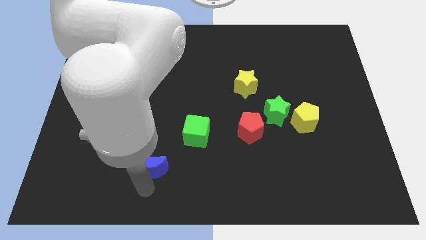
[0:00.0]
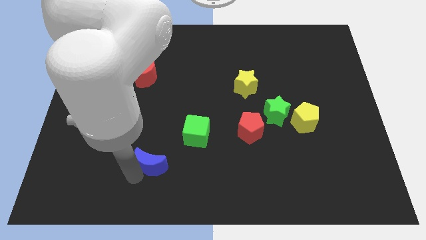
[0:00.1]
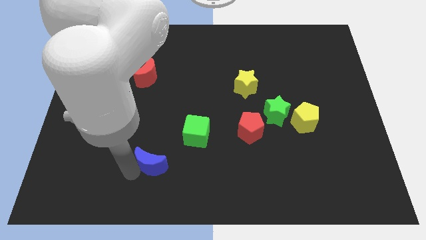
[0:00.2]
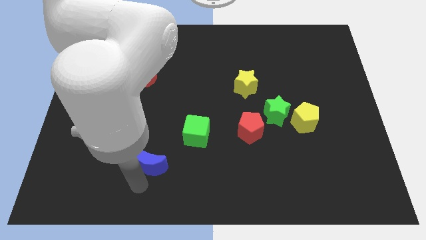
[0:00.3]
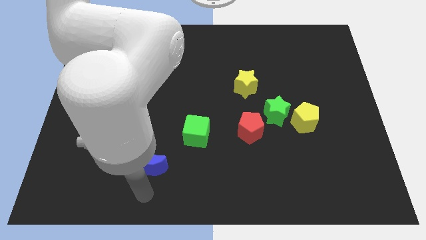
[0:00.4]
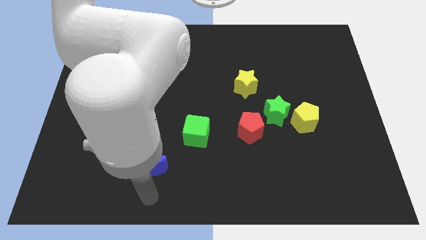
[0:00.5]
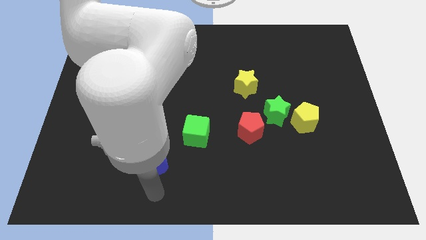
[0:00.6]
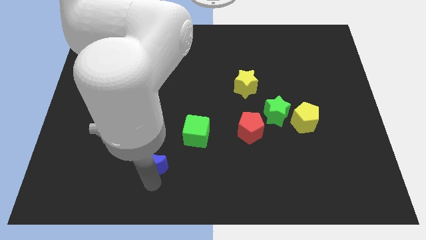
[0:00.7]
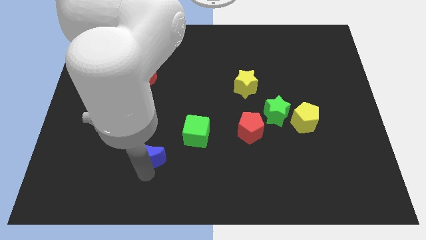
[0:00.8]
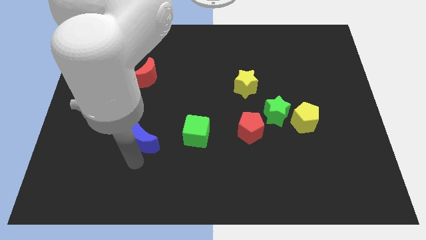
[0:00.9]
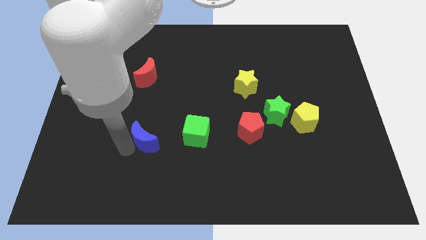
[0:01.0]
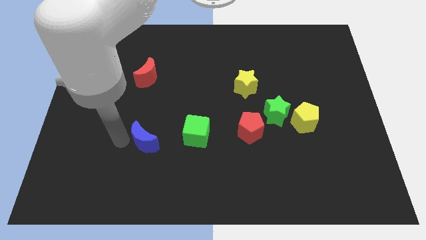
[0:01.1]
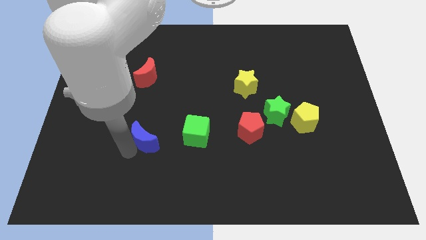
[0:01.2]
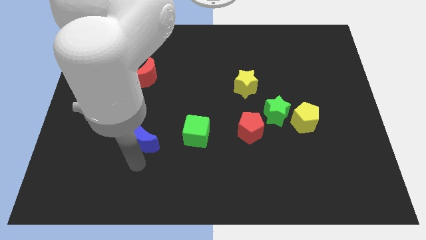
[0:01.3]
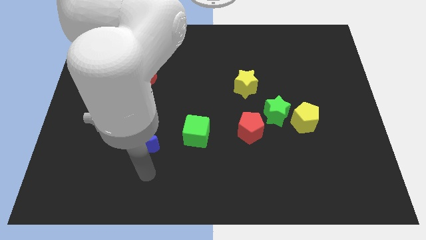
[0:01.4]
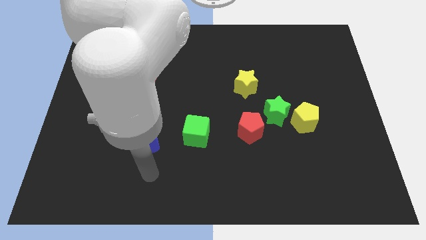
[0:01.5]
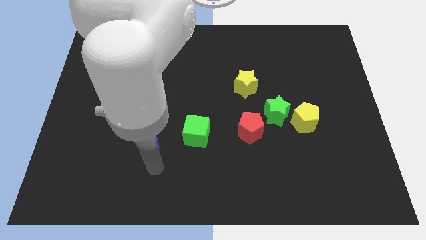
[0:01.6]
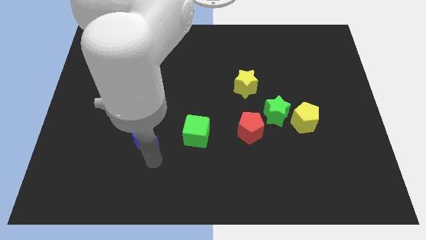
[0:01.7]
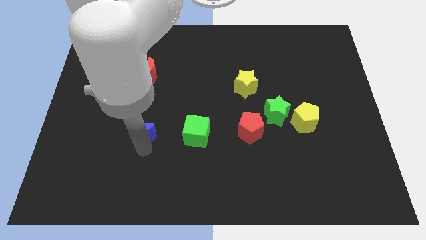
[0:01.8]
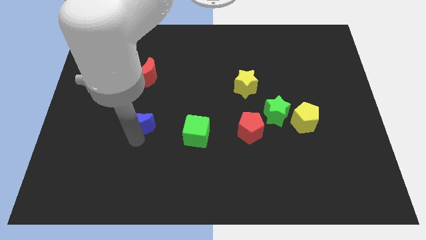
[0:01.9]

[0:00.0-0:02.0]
slide the blue moon to the left side of the green cube

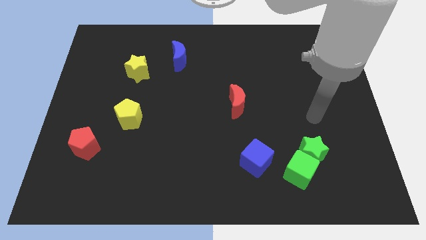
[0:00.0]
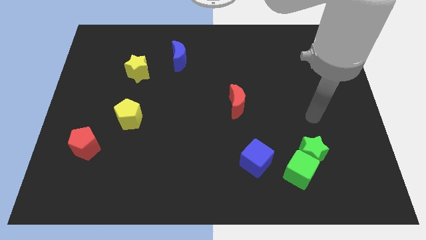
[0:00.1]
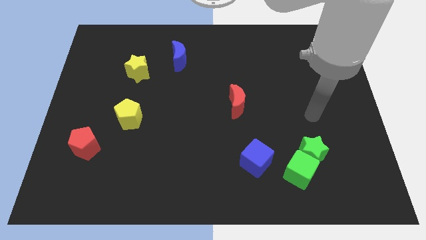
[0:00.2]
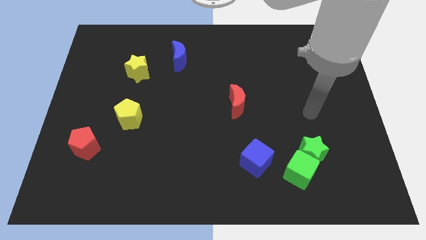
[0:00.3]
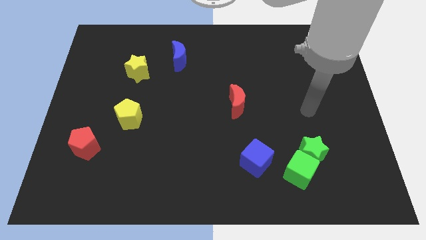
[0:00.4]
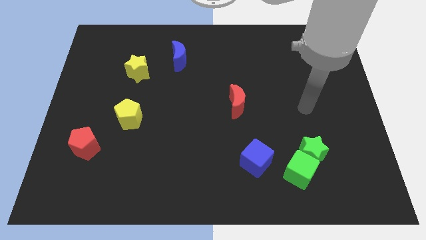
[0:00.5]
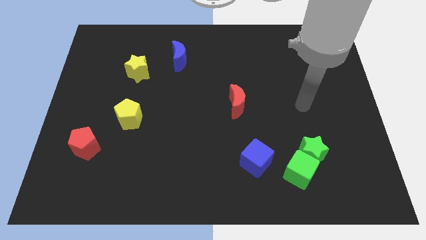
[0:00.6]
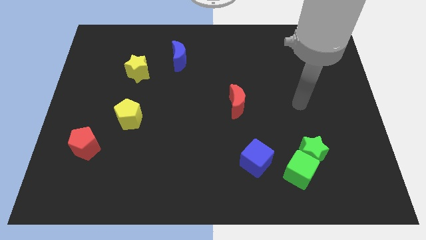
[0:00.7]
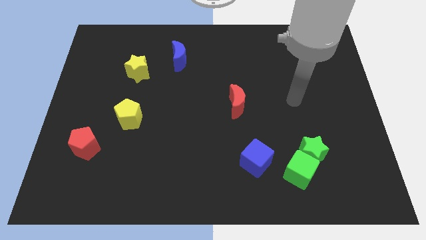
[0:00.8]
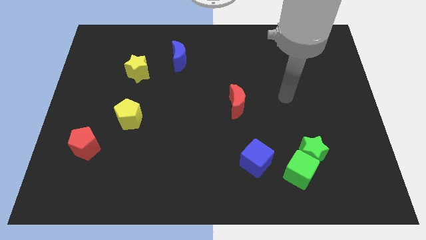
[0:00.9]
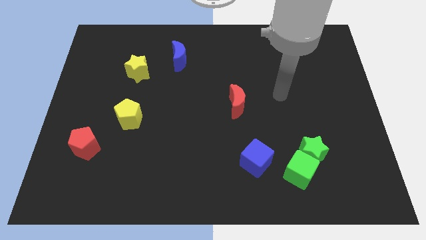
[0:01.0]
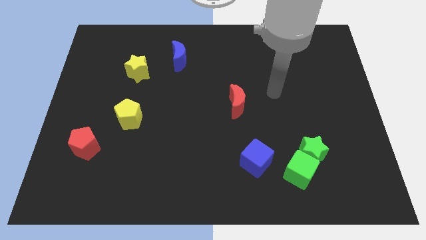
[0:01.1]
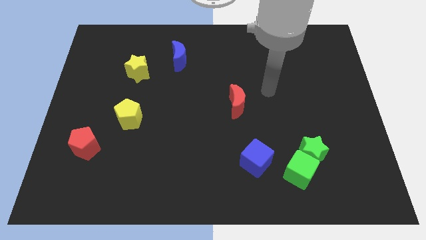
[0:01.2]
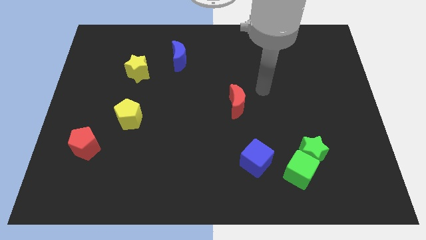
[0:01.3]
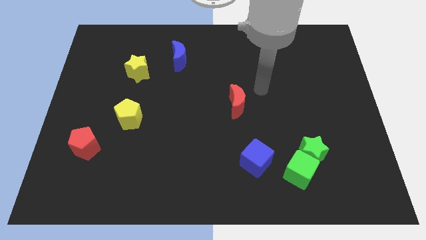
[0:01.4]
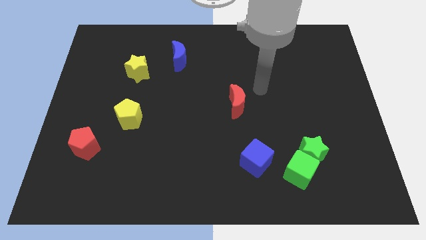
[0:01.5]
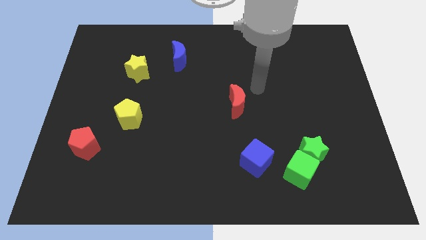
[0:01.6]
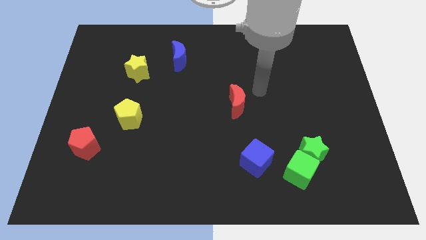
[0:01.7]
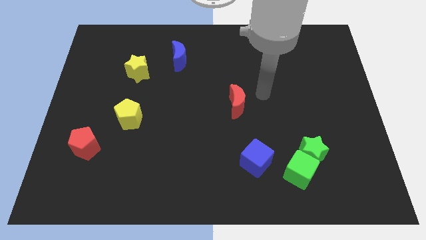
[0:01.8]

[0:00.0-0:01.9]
move your hand above the blue cube

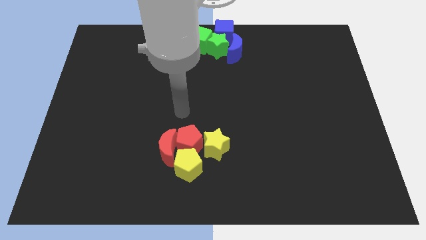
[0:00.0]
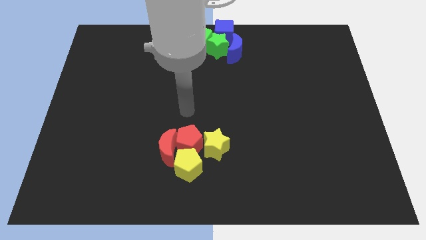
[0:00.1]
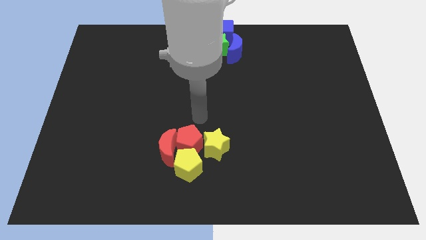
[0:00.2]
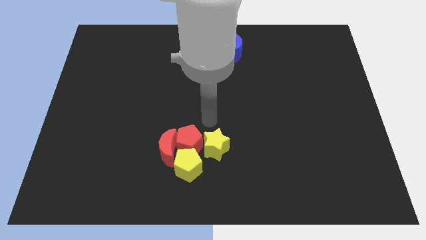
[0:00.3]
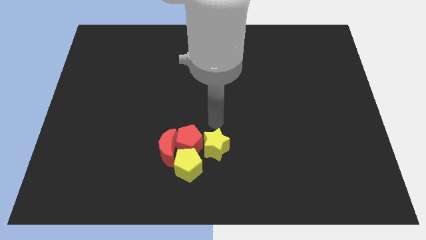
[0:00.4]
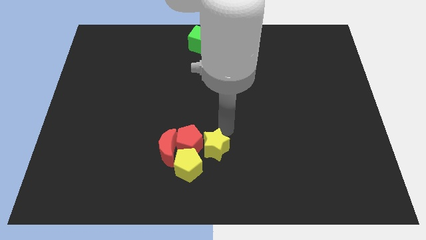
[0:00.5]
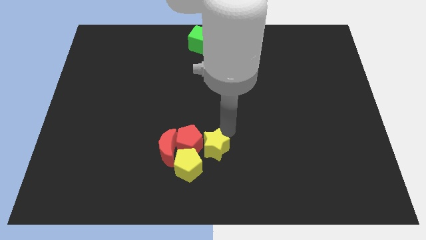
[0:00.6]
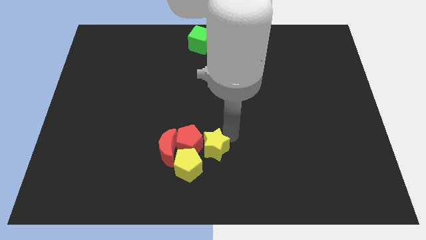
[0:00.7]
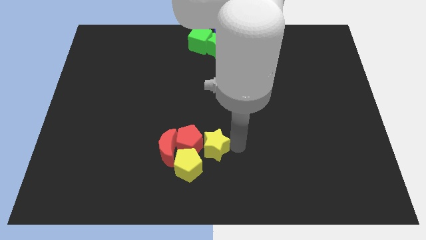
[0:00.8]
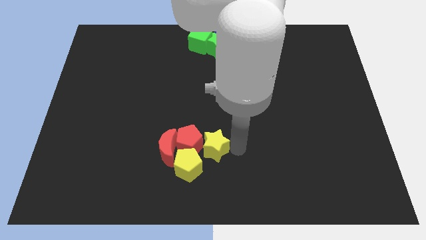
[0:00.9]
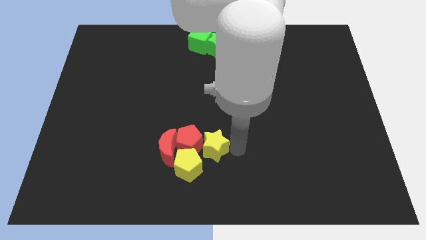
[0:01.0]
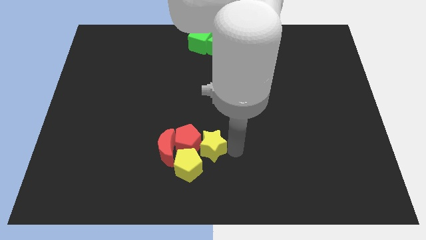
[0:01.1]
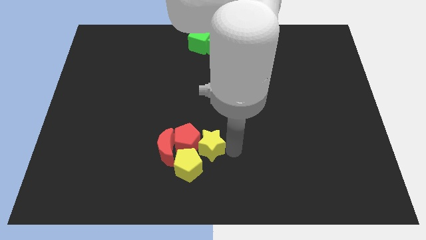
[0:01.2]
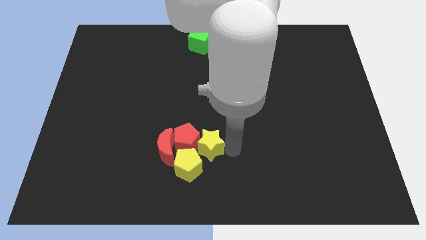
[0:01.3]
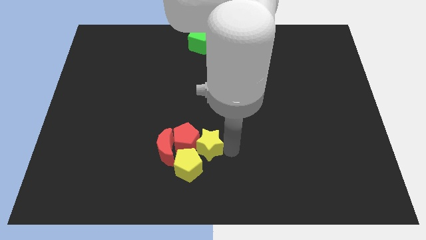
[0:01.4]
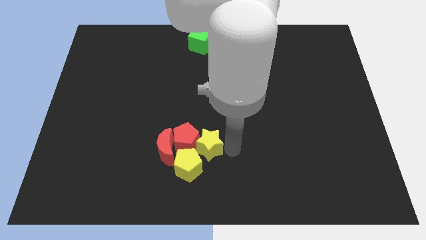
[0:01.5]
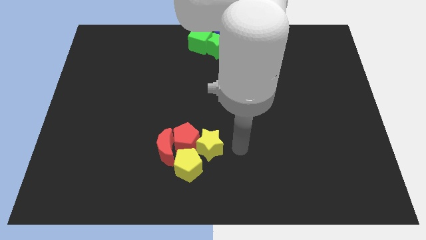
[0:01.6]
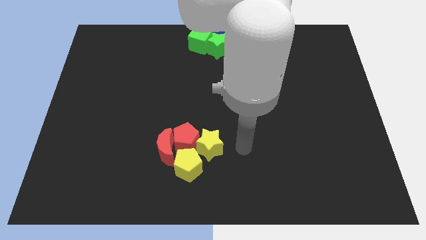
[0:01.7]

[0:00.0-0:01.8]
move the yellow star to the right of the red pentagon

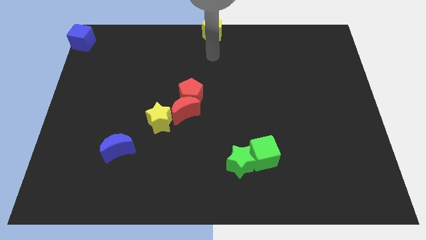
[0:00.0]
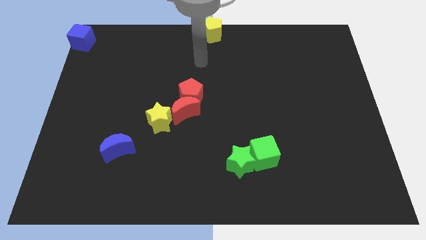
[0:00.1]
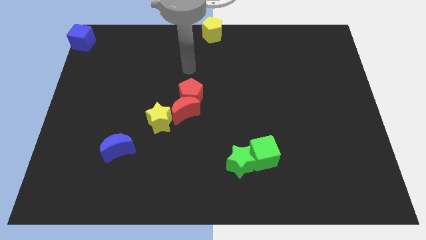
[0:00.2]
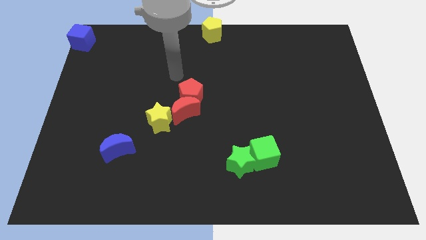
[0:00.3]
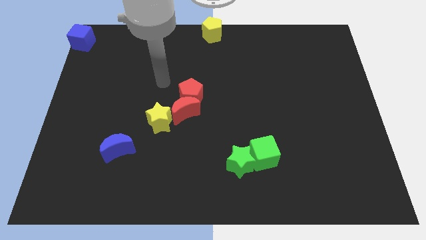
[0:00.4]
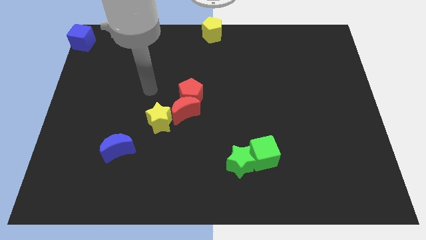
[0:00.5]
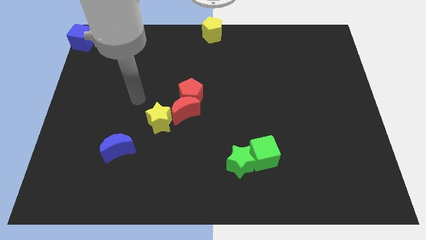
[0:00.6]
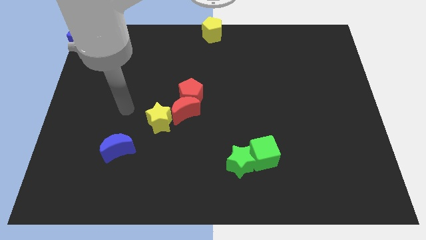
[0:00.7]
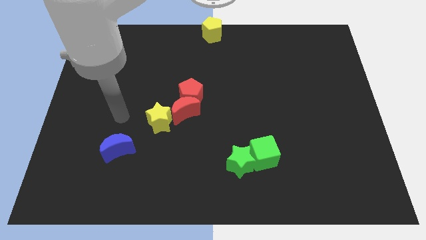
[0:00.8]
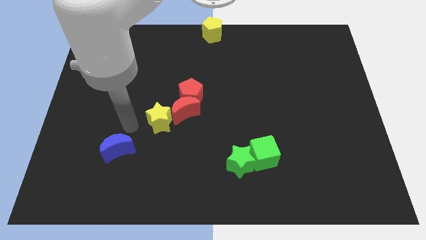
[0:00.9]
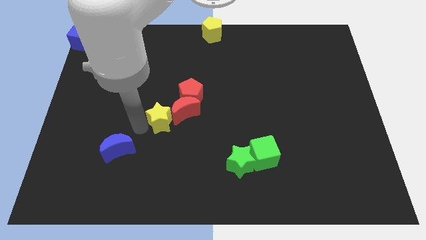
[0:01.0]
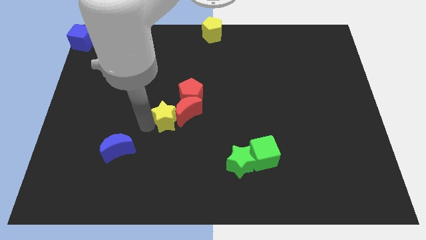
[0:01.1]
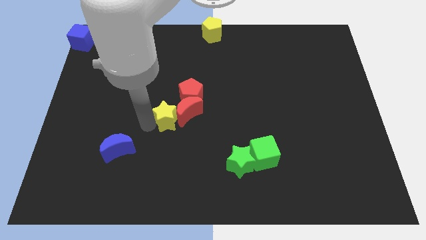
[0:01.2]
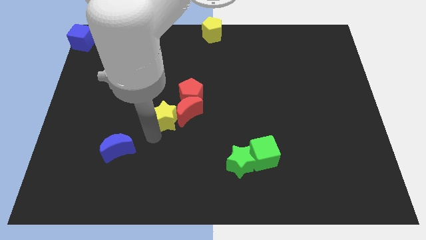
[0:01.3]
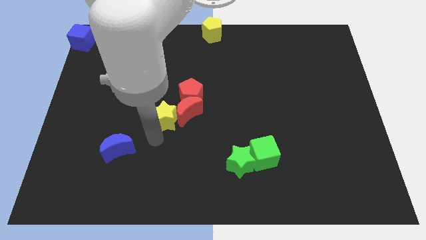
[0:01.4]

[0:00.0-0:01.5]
slide the yellow star diagonally to the red moon

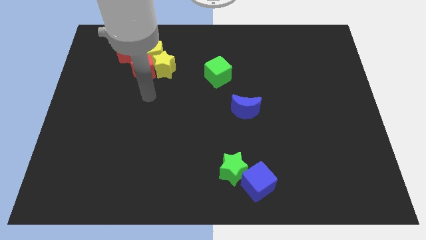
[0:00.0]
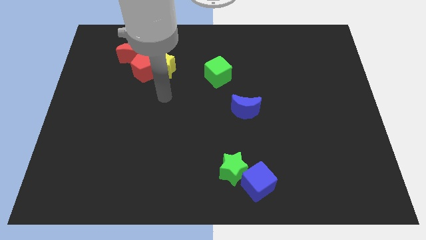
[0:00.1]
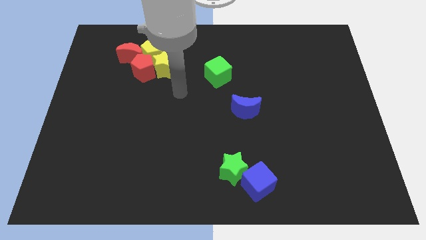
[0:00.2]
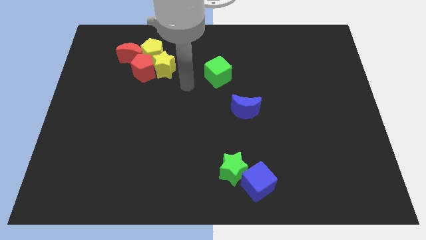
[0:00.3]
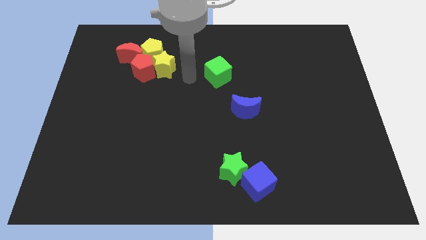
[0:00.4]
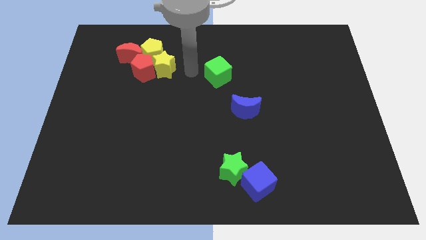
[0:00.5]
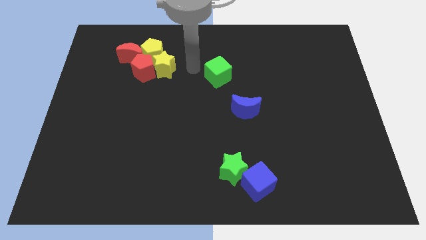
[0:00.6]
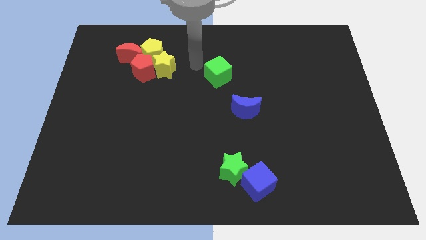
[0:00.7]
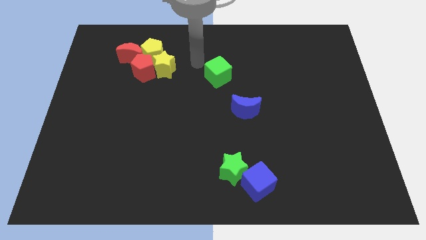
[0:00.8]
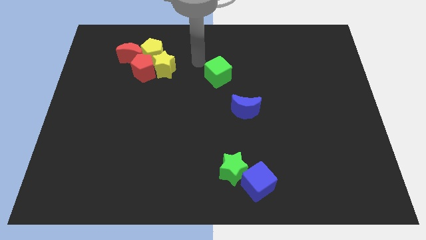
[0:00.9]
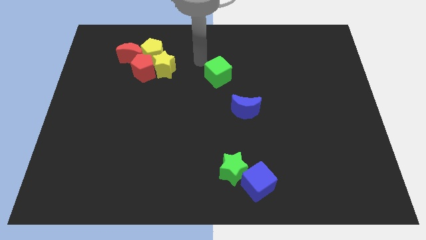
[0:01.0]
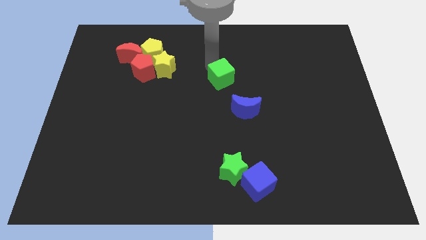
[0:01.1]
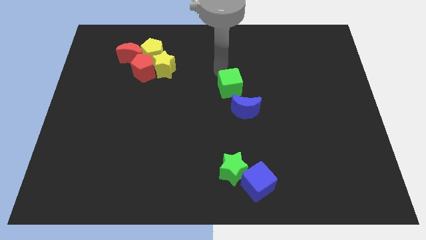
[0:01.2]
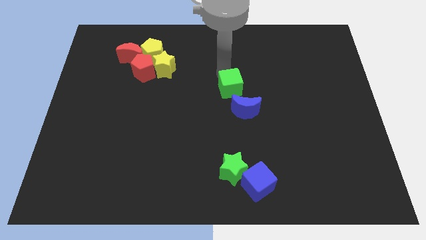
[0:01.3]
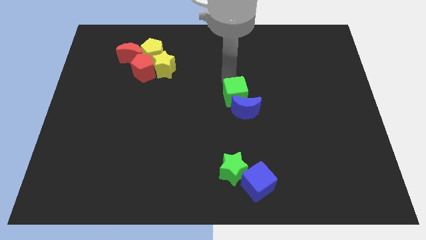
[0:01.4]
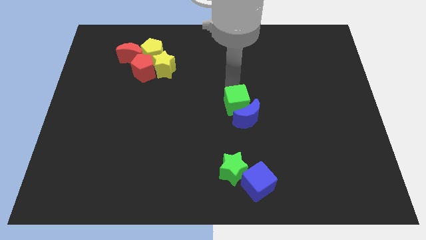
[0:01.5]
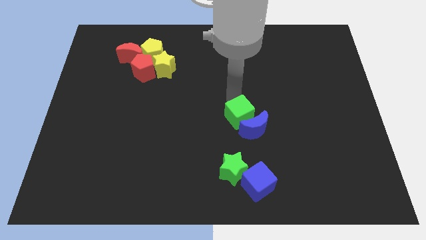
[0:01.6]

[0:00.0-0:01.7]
push the green cube into blue crescent
